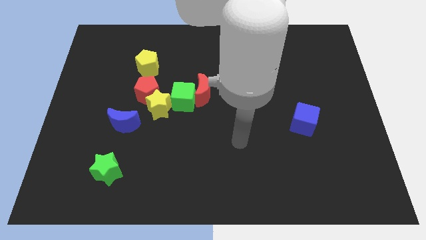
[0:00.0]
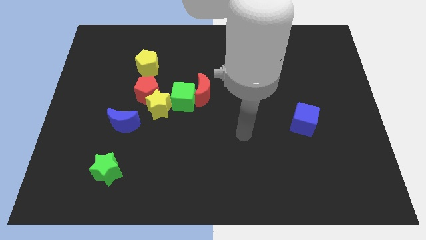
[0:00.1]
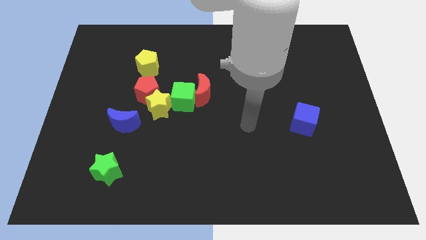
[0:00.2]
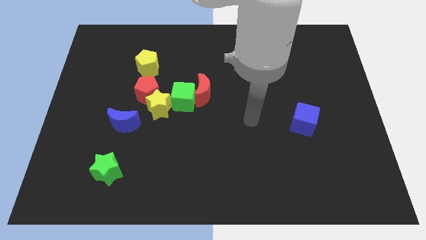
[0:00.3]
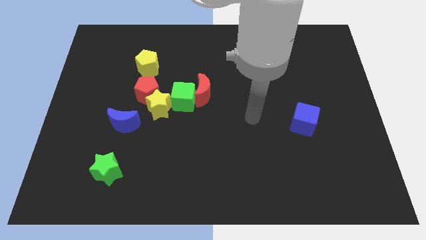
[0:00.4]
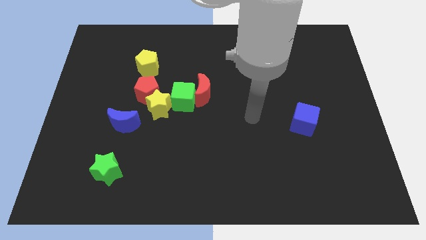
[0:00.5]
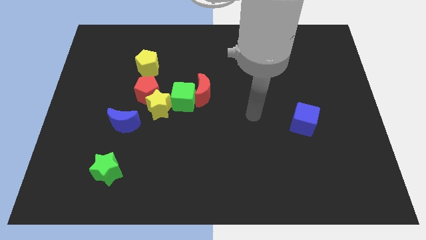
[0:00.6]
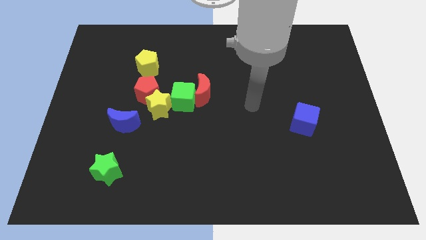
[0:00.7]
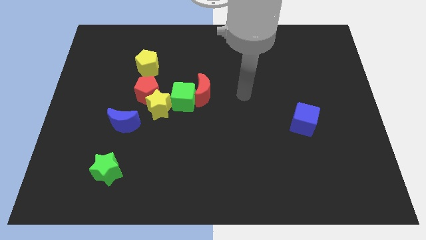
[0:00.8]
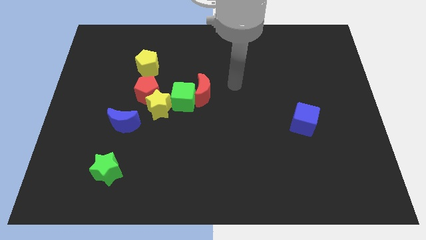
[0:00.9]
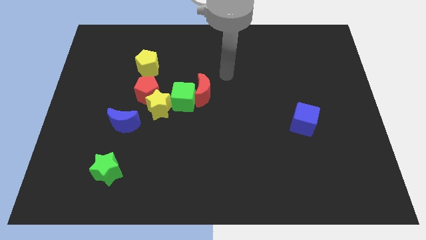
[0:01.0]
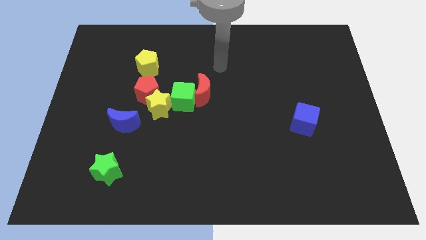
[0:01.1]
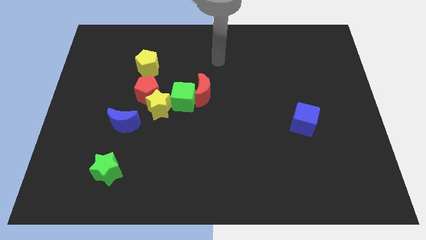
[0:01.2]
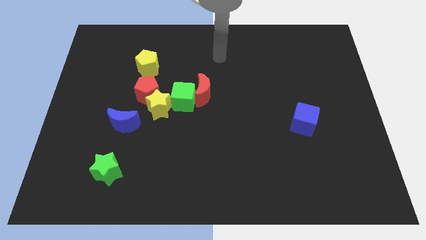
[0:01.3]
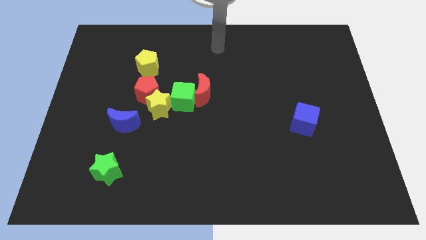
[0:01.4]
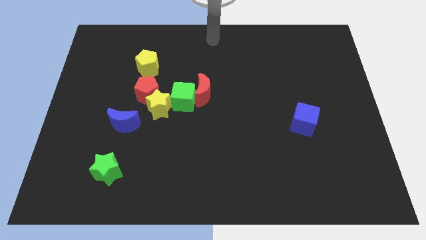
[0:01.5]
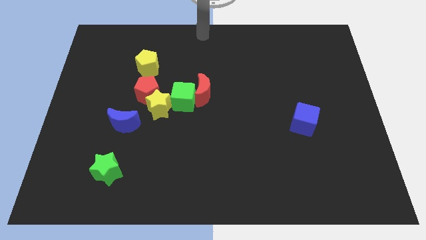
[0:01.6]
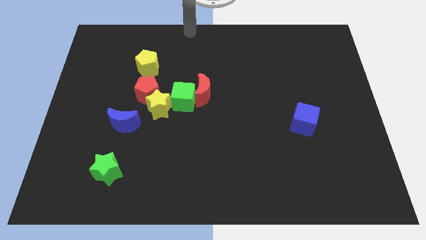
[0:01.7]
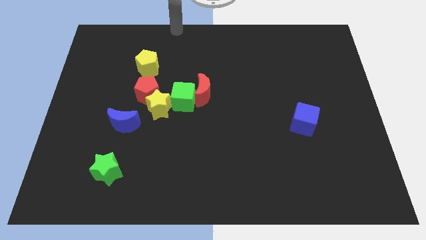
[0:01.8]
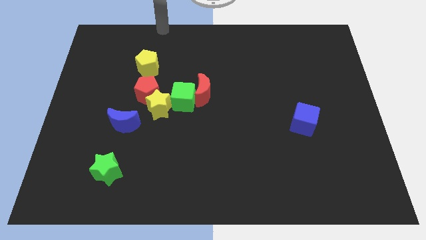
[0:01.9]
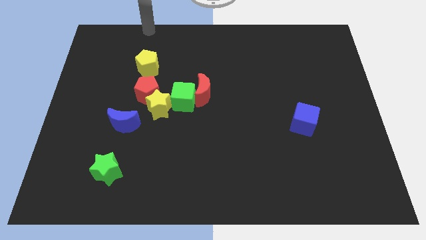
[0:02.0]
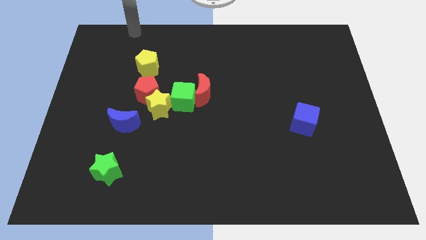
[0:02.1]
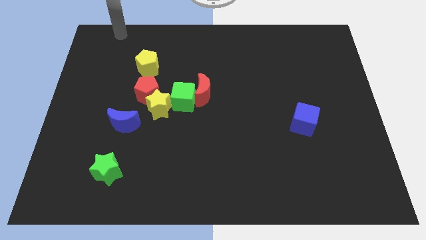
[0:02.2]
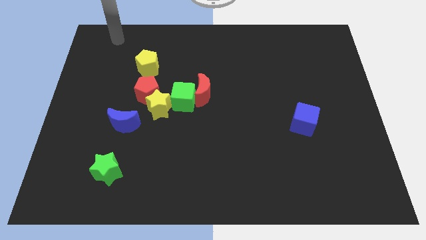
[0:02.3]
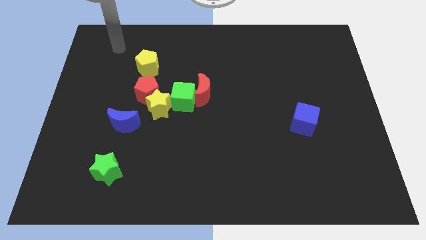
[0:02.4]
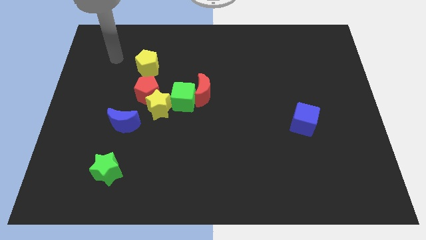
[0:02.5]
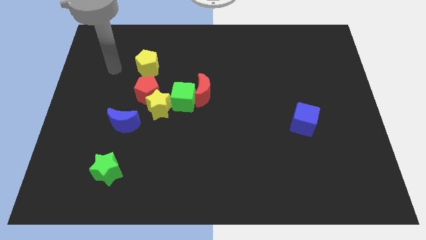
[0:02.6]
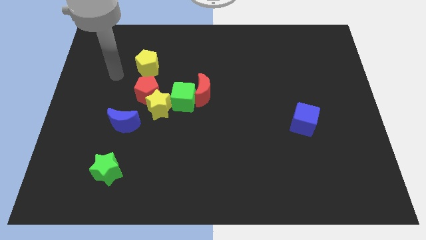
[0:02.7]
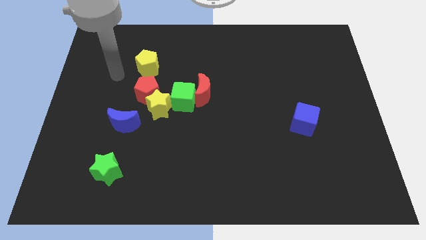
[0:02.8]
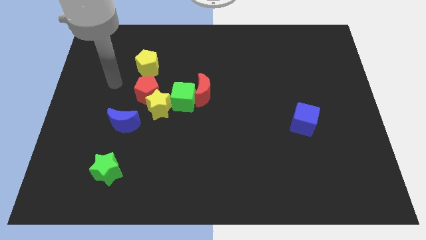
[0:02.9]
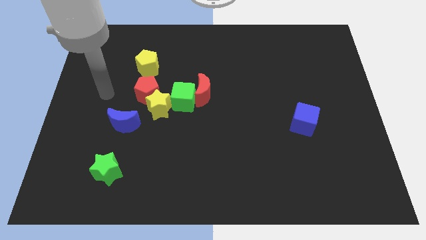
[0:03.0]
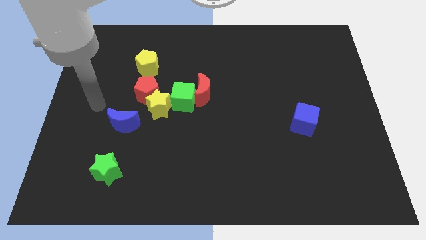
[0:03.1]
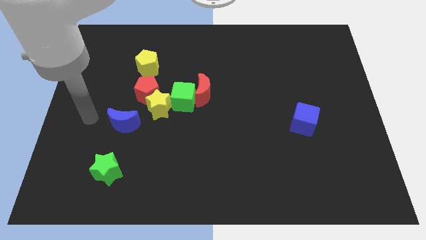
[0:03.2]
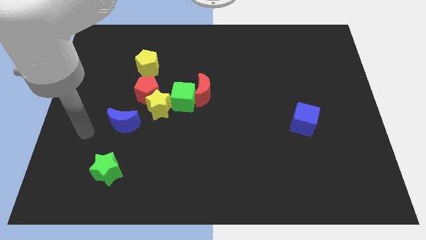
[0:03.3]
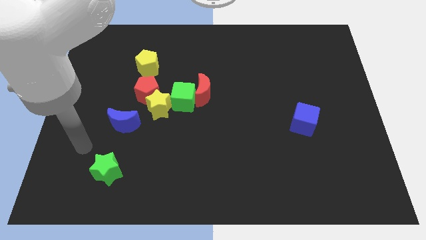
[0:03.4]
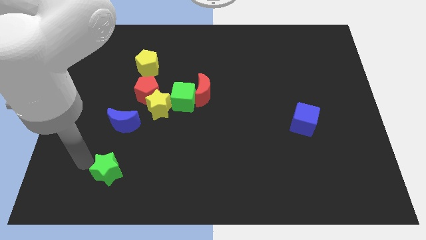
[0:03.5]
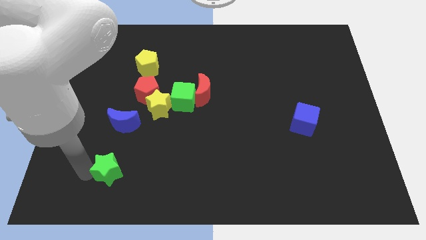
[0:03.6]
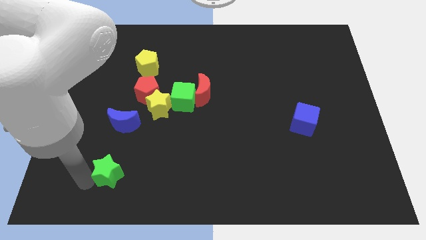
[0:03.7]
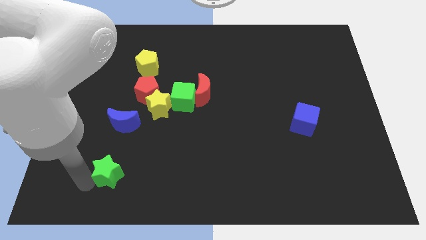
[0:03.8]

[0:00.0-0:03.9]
touch the left side of the green star

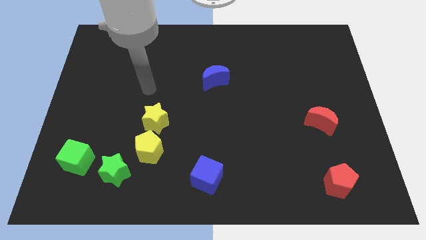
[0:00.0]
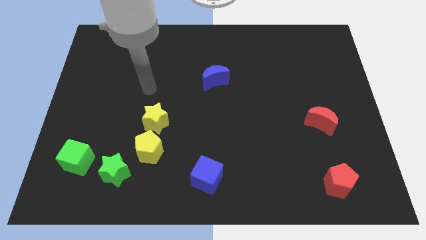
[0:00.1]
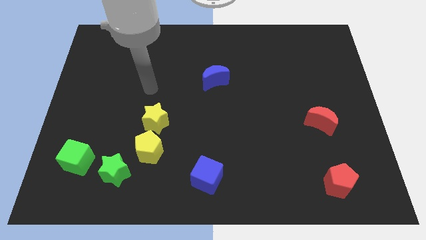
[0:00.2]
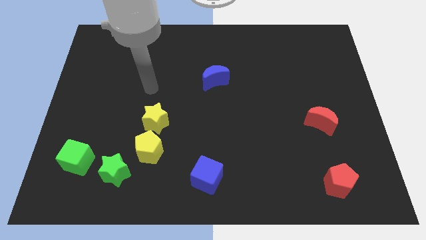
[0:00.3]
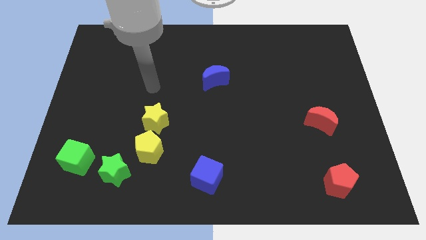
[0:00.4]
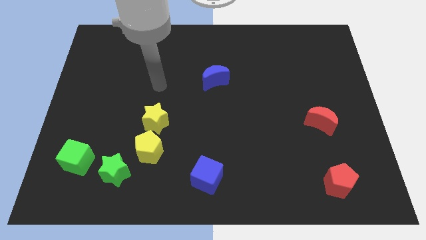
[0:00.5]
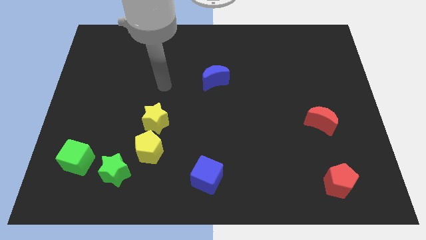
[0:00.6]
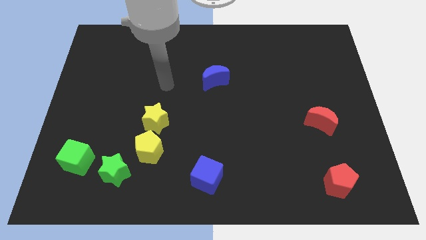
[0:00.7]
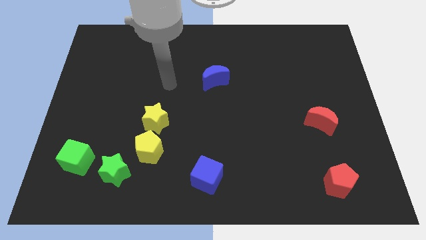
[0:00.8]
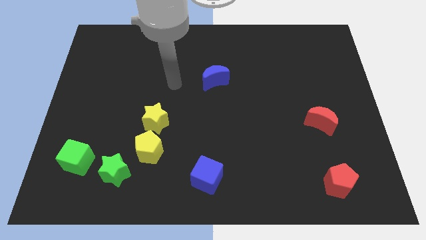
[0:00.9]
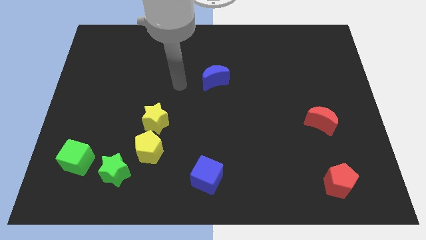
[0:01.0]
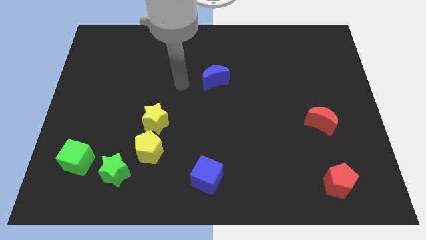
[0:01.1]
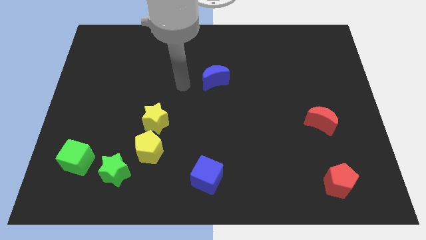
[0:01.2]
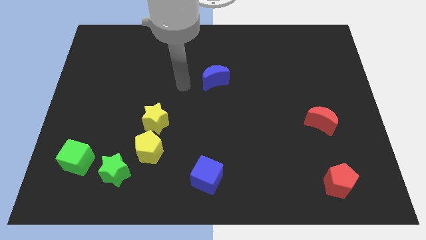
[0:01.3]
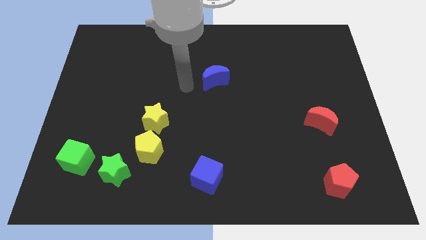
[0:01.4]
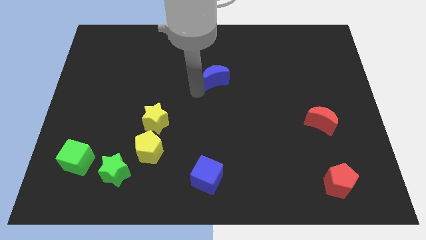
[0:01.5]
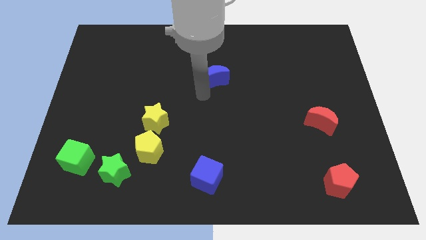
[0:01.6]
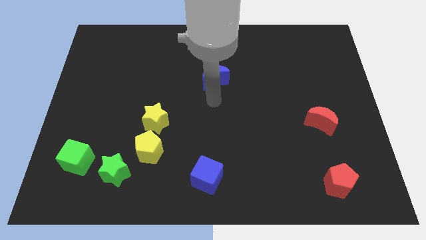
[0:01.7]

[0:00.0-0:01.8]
place your arm below the blue moon

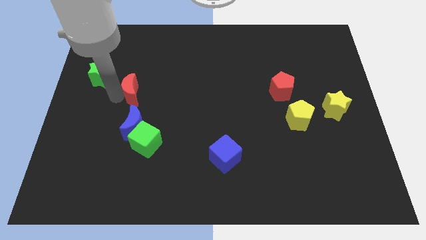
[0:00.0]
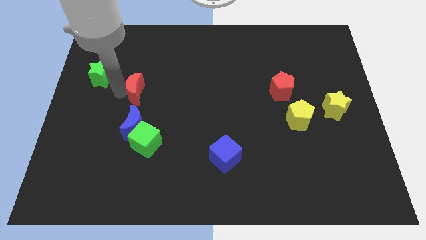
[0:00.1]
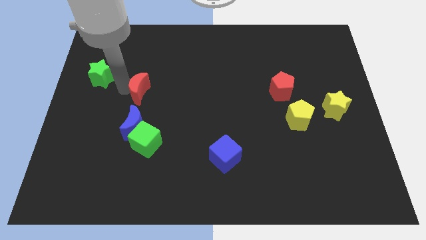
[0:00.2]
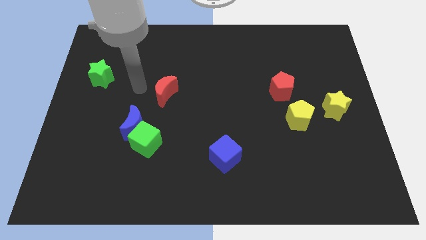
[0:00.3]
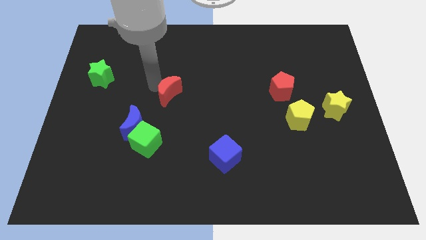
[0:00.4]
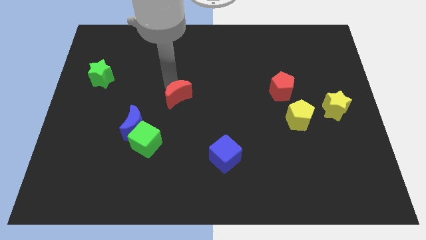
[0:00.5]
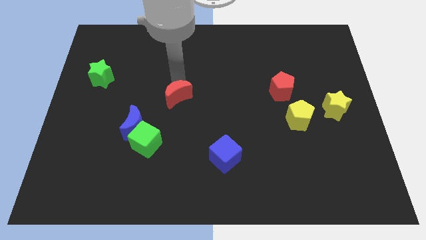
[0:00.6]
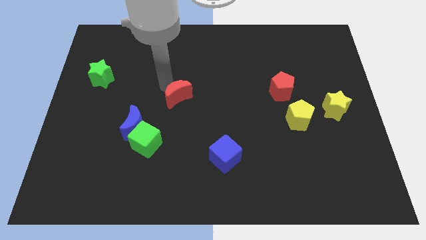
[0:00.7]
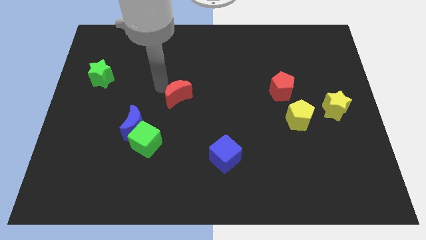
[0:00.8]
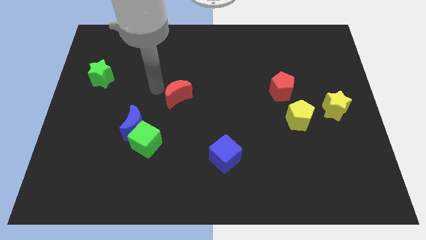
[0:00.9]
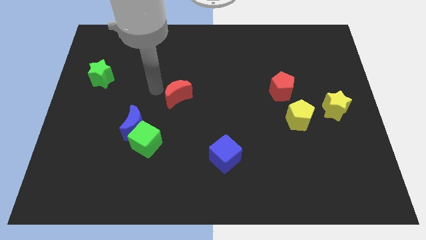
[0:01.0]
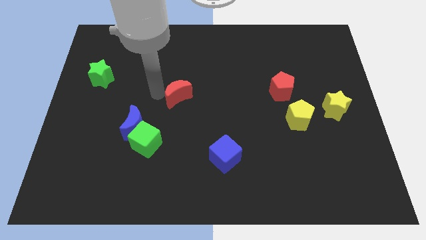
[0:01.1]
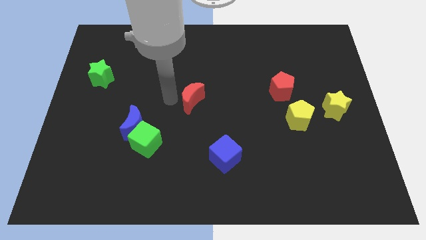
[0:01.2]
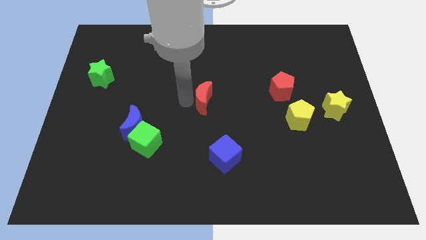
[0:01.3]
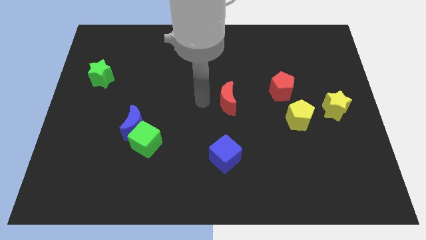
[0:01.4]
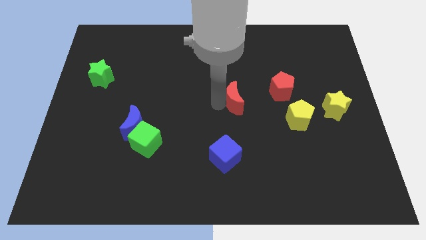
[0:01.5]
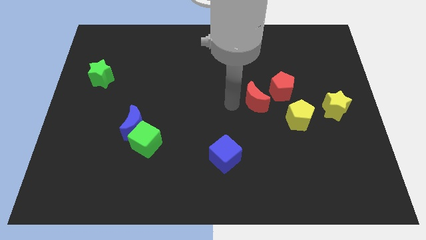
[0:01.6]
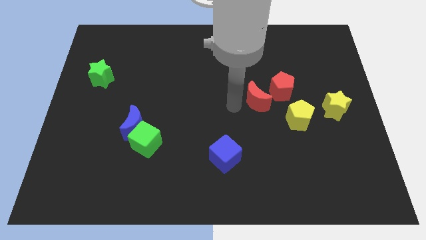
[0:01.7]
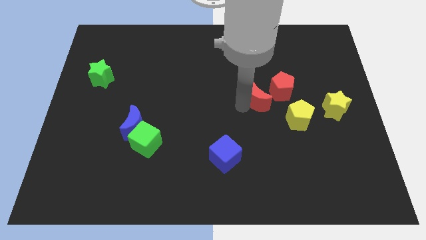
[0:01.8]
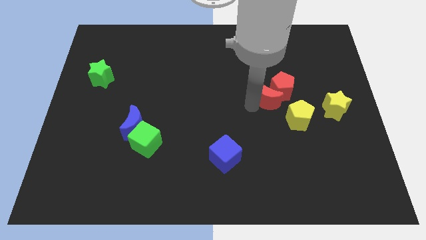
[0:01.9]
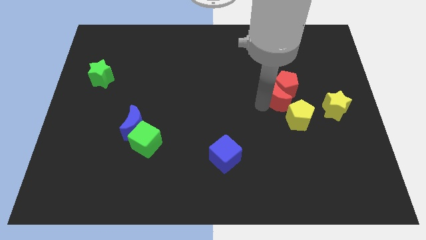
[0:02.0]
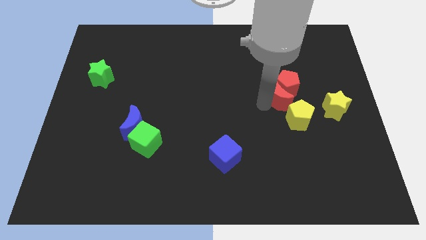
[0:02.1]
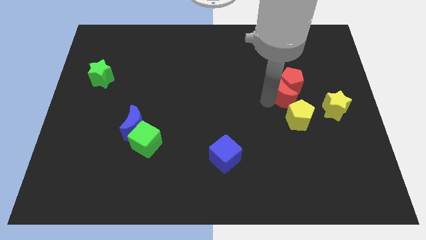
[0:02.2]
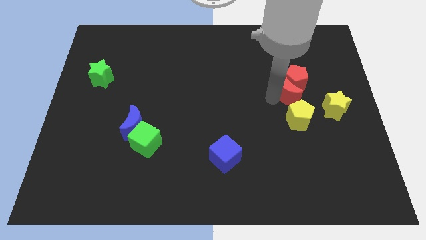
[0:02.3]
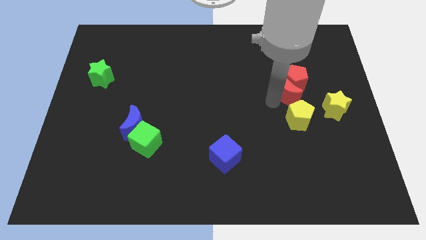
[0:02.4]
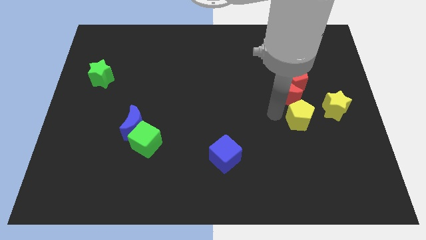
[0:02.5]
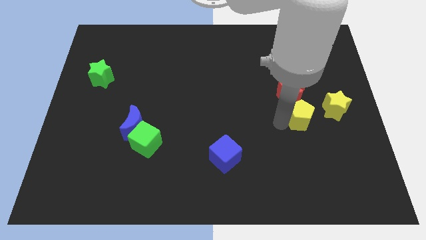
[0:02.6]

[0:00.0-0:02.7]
move the red crescent below the red pentagon

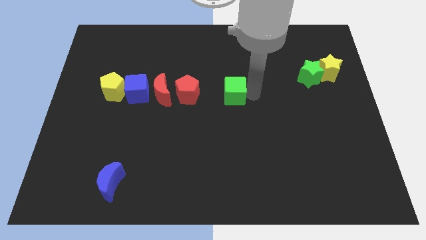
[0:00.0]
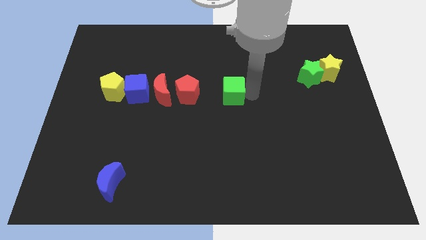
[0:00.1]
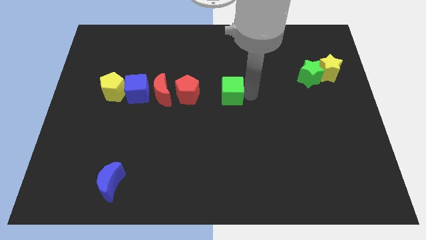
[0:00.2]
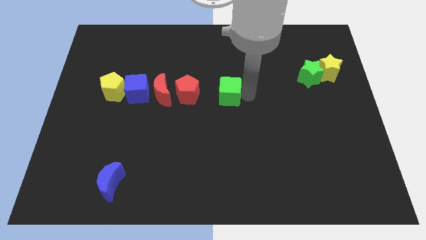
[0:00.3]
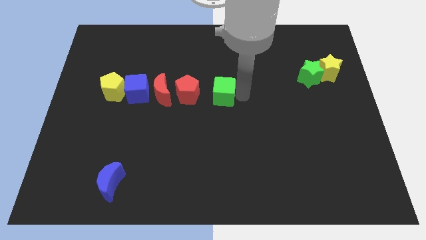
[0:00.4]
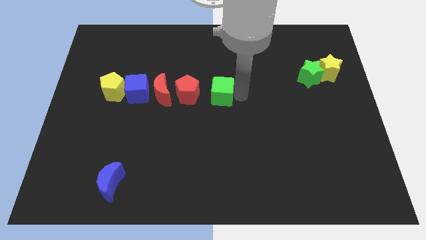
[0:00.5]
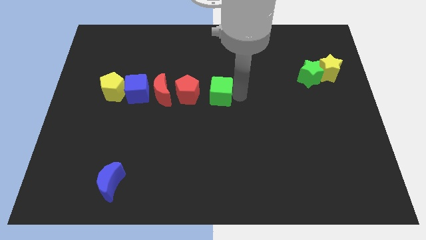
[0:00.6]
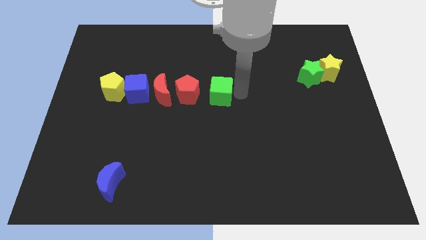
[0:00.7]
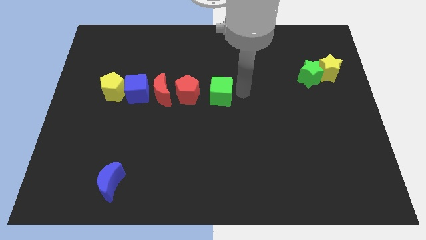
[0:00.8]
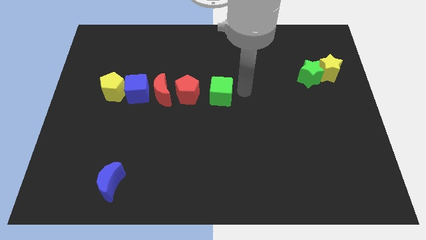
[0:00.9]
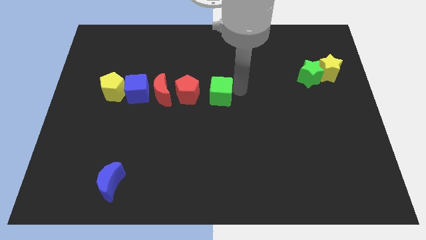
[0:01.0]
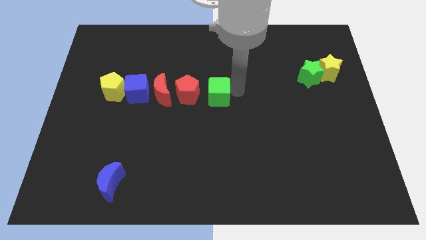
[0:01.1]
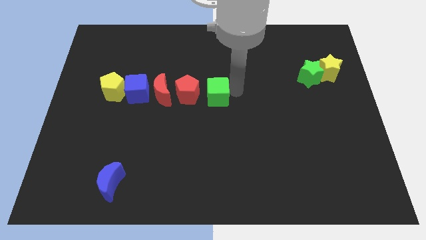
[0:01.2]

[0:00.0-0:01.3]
move the green cube to the right of the red pentagon
